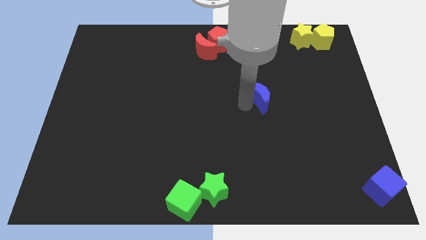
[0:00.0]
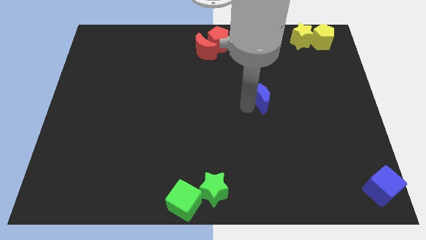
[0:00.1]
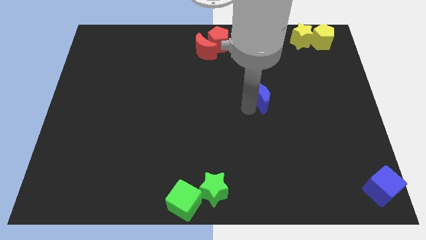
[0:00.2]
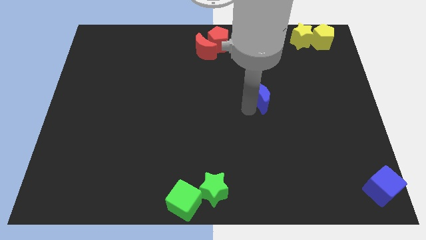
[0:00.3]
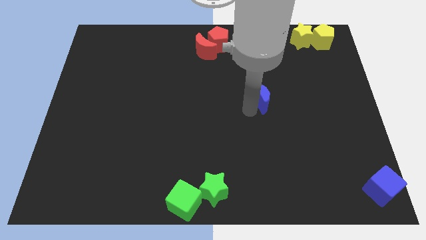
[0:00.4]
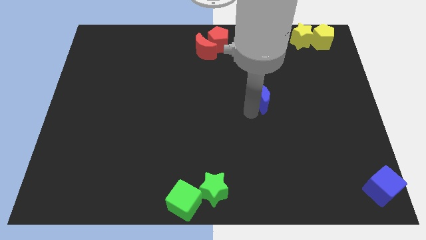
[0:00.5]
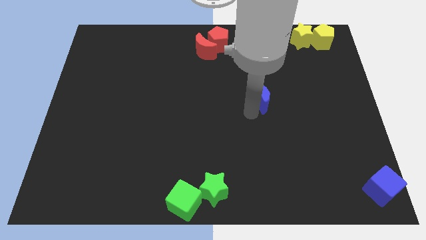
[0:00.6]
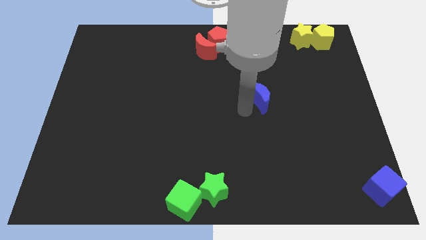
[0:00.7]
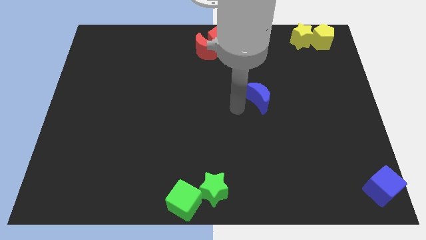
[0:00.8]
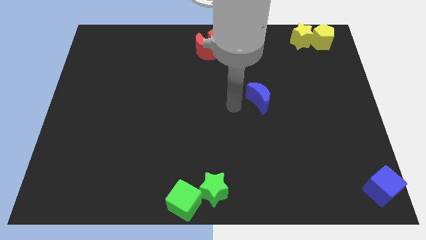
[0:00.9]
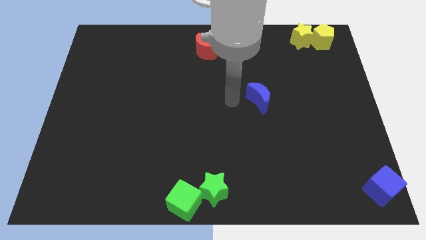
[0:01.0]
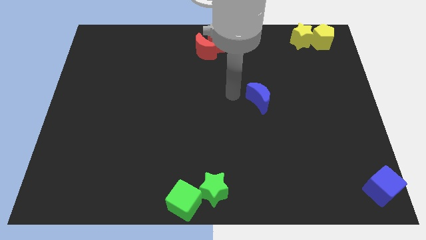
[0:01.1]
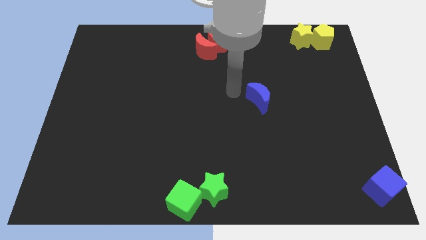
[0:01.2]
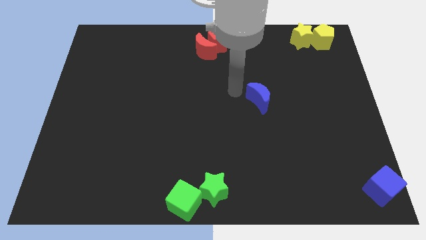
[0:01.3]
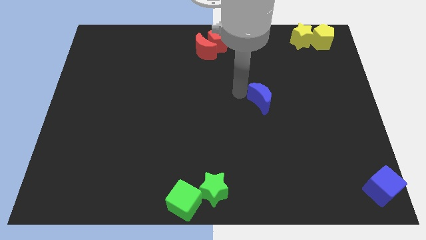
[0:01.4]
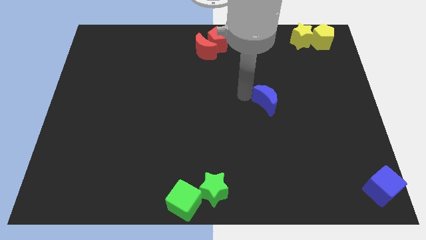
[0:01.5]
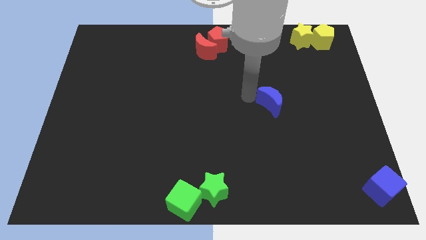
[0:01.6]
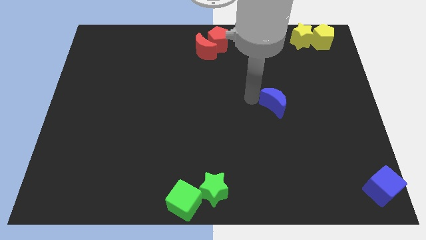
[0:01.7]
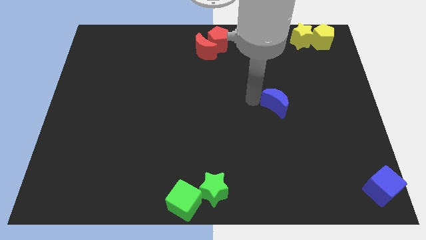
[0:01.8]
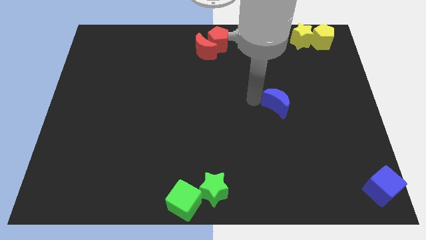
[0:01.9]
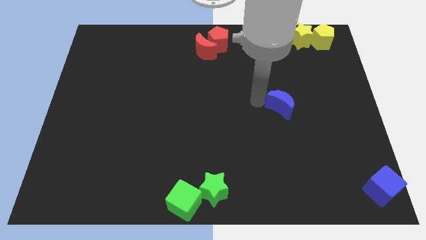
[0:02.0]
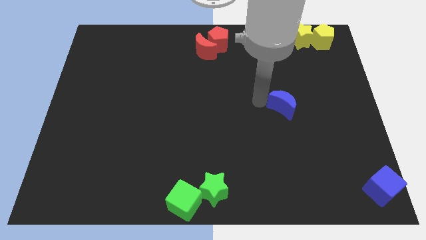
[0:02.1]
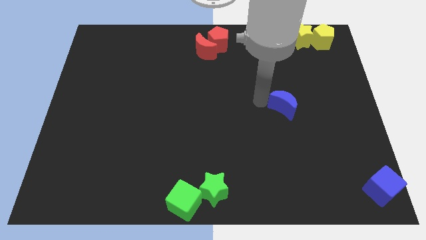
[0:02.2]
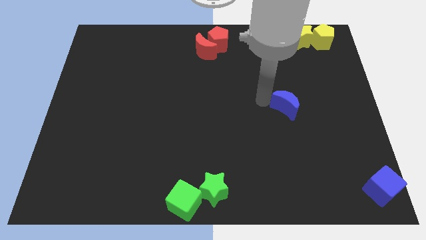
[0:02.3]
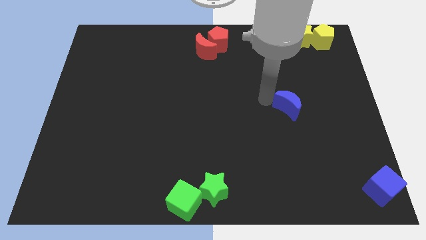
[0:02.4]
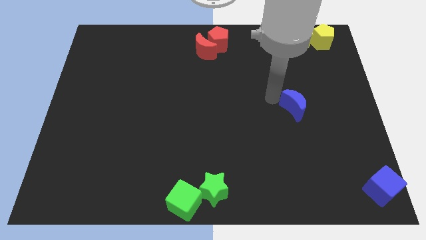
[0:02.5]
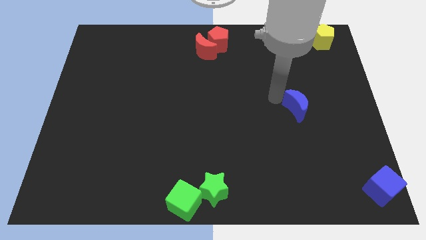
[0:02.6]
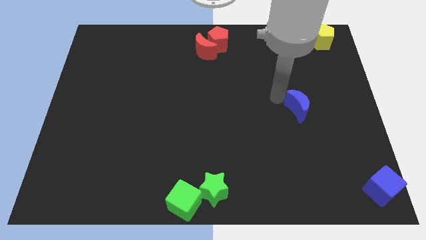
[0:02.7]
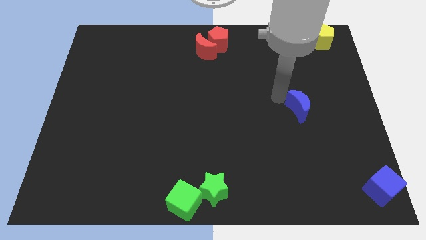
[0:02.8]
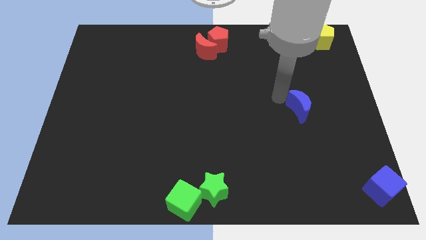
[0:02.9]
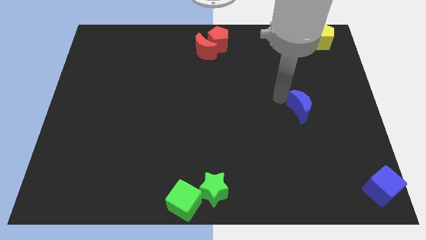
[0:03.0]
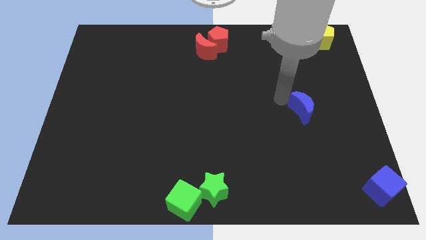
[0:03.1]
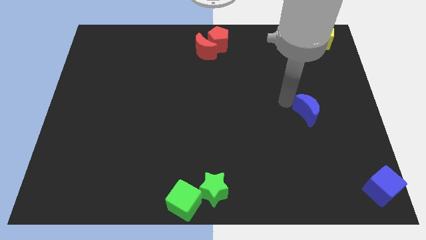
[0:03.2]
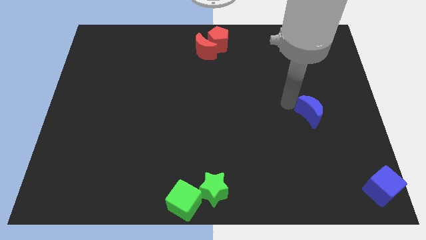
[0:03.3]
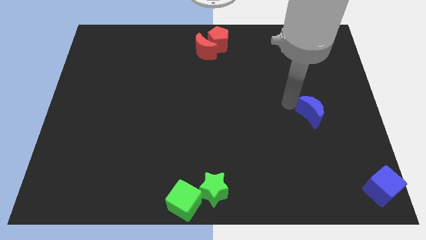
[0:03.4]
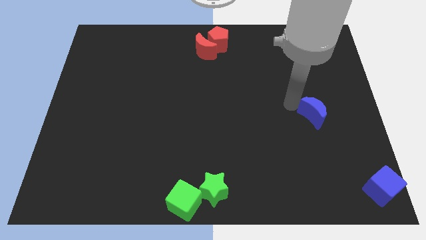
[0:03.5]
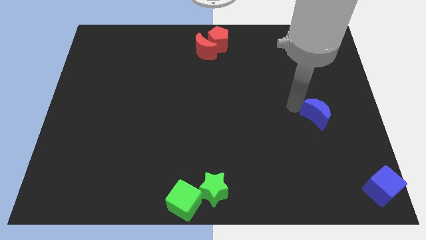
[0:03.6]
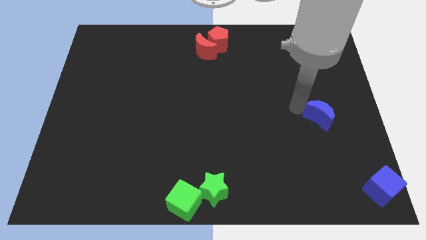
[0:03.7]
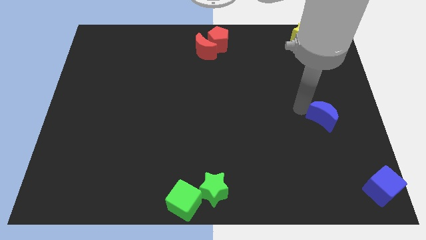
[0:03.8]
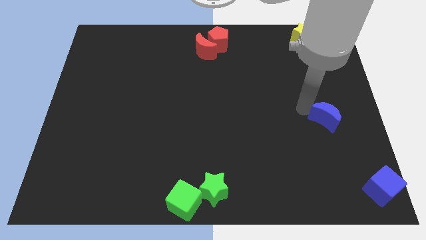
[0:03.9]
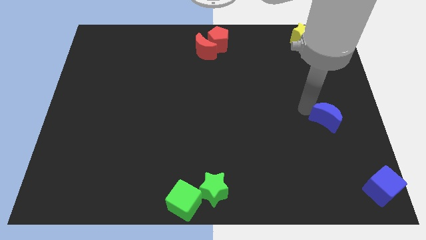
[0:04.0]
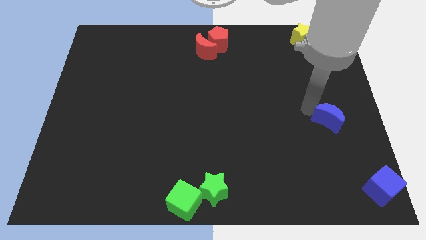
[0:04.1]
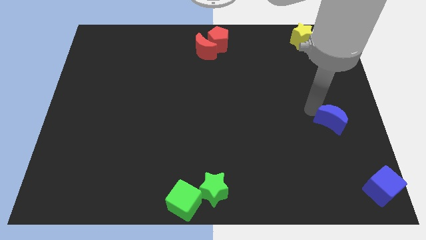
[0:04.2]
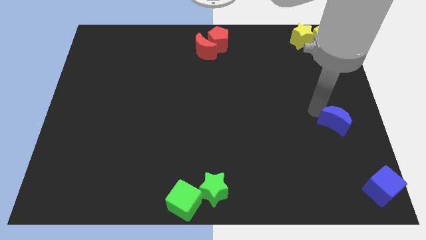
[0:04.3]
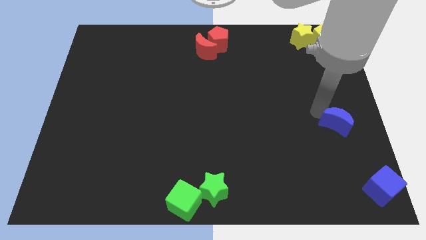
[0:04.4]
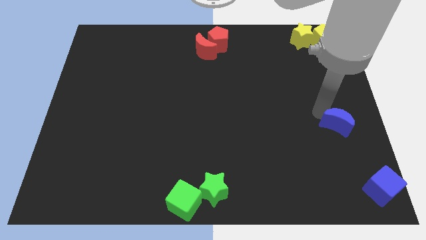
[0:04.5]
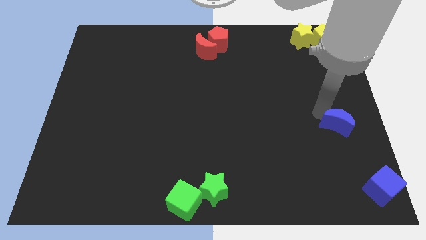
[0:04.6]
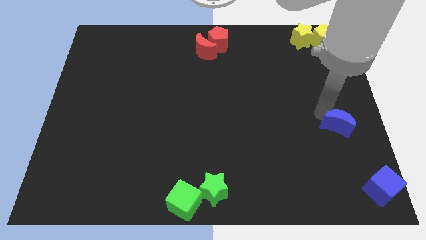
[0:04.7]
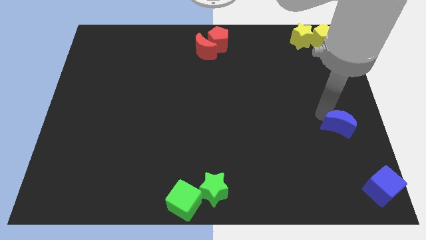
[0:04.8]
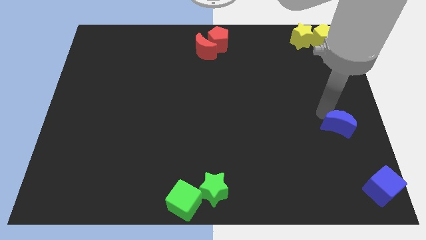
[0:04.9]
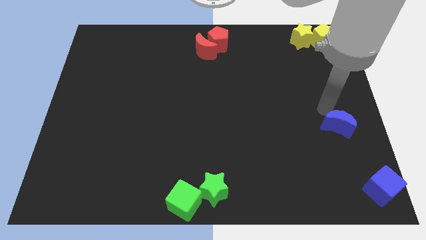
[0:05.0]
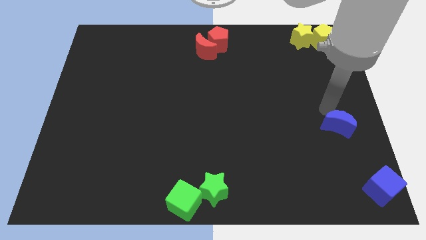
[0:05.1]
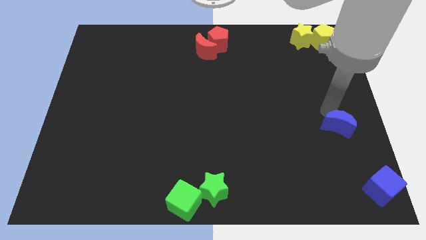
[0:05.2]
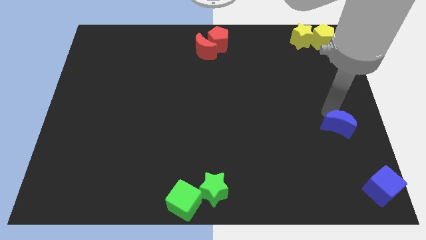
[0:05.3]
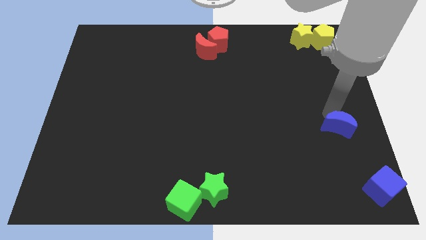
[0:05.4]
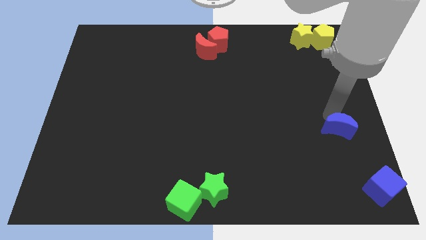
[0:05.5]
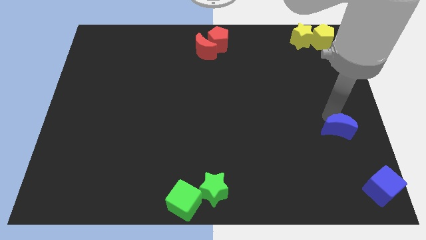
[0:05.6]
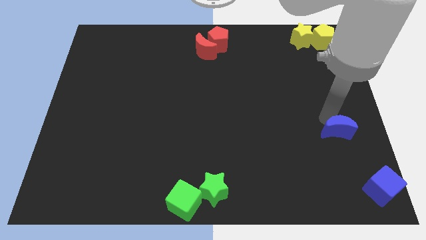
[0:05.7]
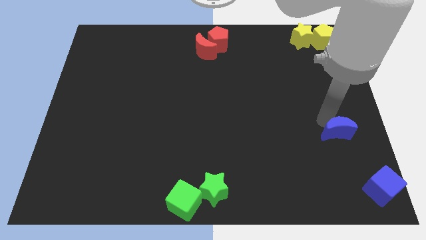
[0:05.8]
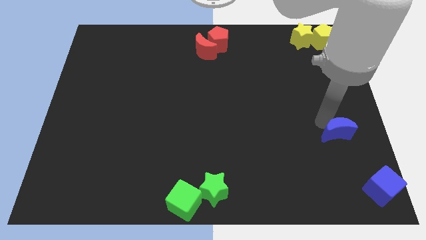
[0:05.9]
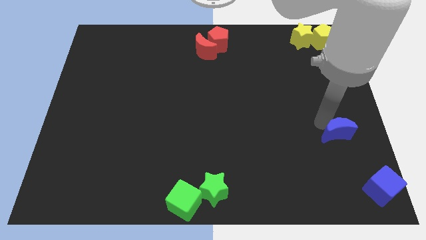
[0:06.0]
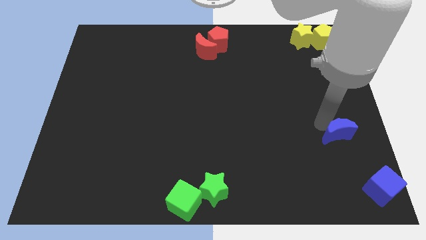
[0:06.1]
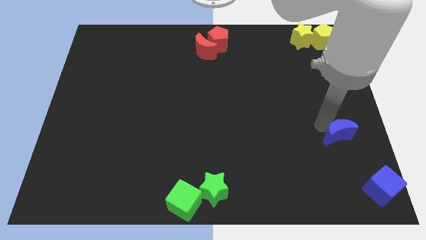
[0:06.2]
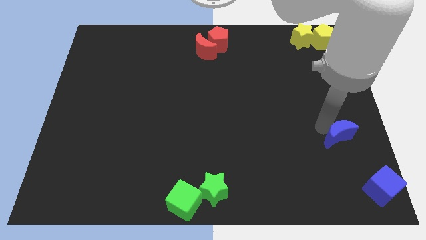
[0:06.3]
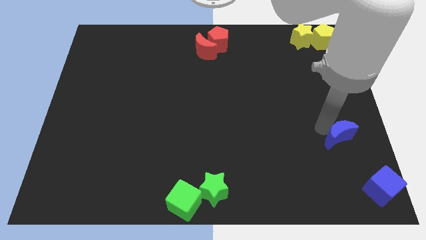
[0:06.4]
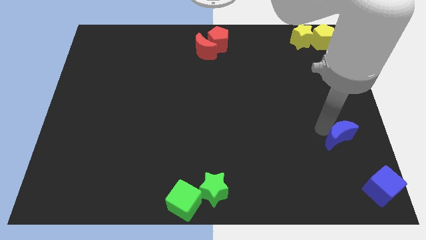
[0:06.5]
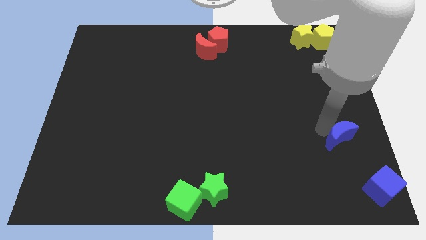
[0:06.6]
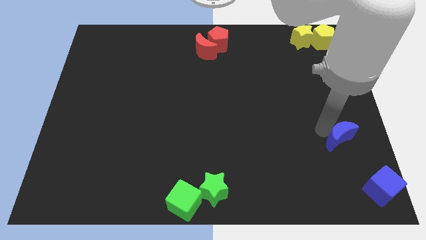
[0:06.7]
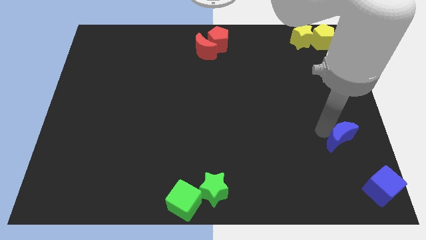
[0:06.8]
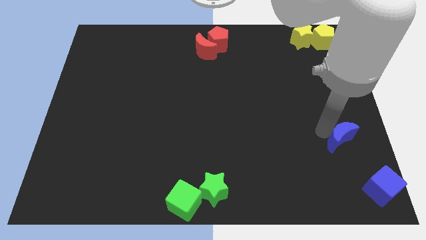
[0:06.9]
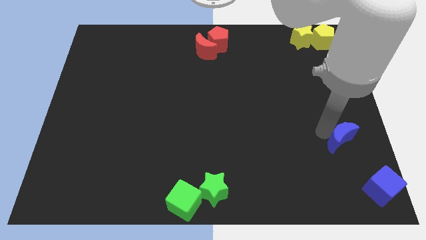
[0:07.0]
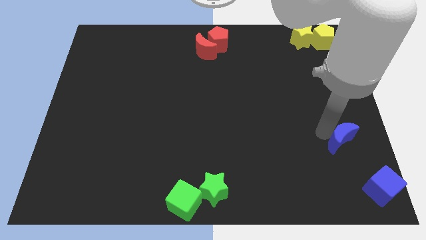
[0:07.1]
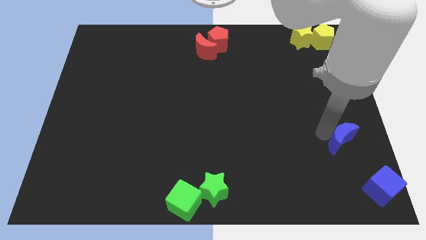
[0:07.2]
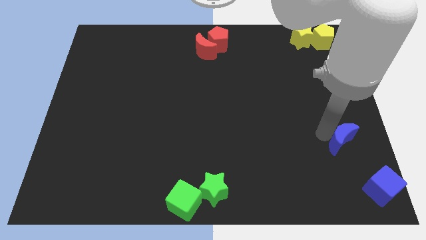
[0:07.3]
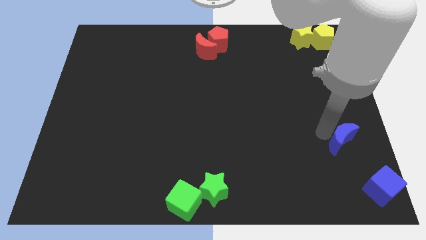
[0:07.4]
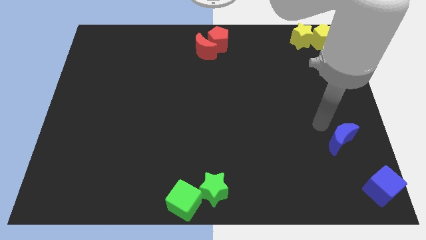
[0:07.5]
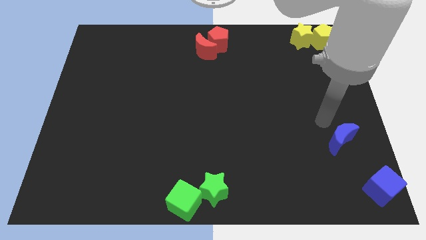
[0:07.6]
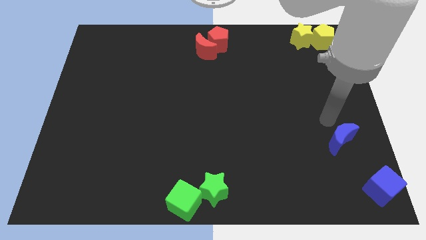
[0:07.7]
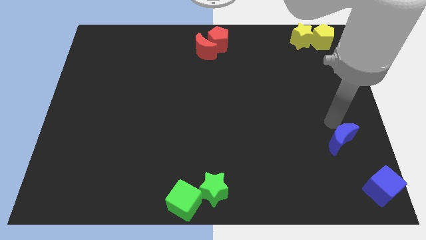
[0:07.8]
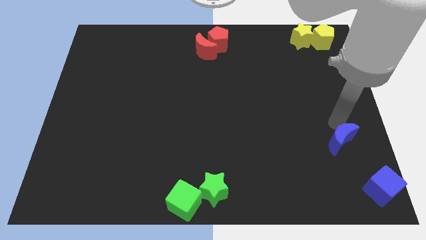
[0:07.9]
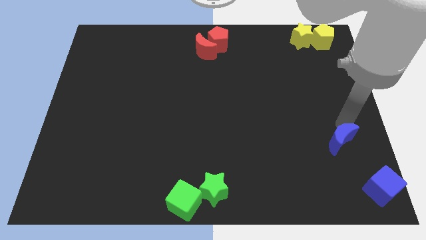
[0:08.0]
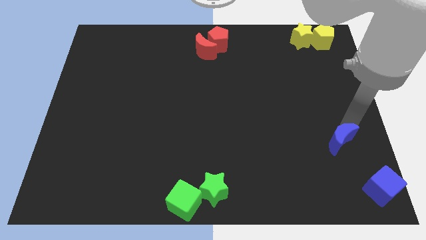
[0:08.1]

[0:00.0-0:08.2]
push the blue moon diagonal to the blue cube

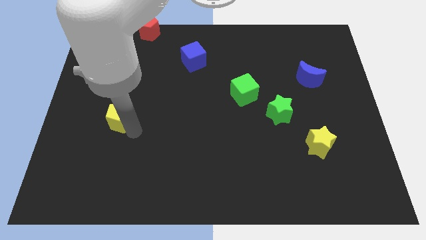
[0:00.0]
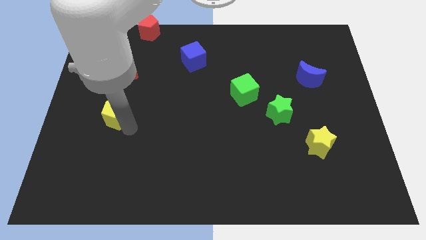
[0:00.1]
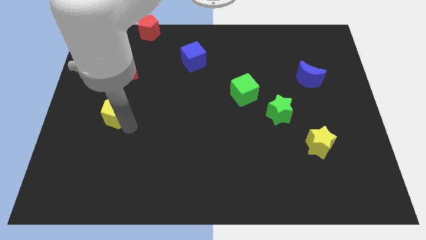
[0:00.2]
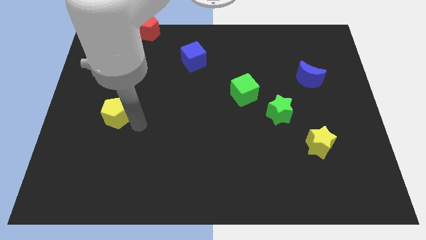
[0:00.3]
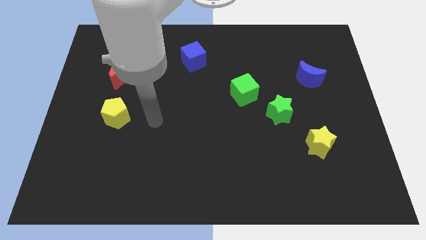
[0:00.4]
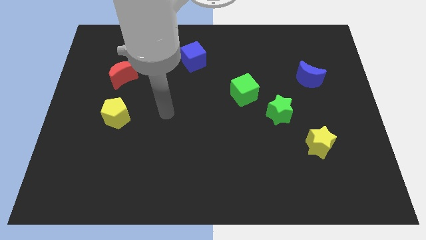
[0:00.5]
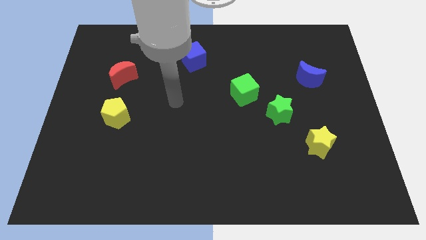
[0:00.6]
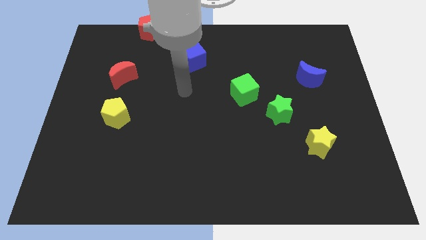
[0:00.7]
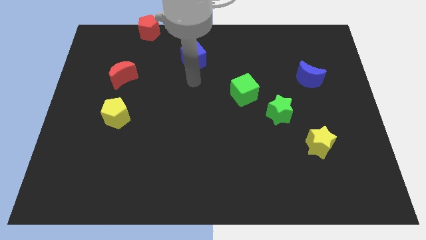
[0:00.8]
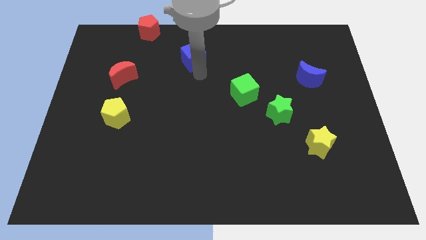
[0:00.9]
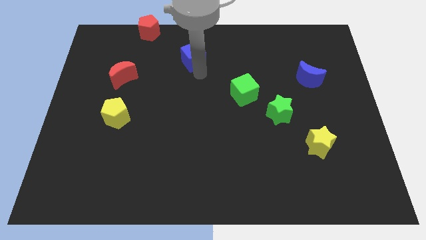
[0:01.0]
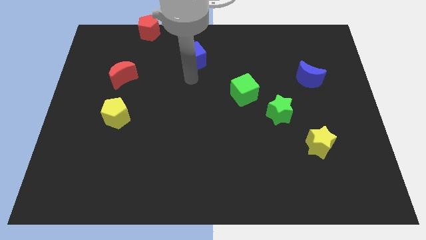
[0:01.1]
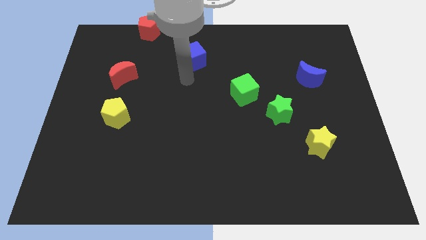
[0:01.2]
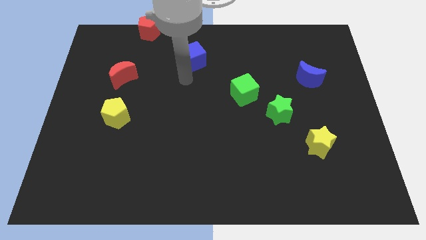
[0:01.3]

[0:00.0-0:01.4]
move arm to the blue cube
